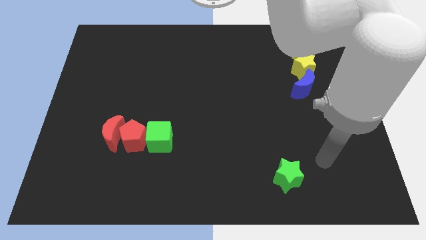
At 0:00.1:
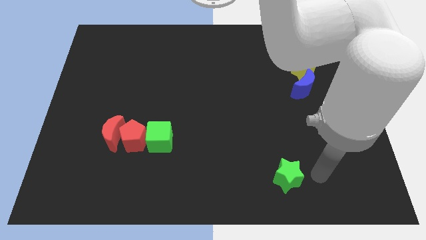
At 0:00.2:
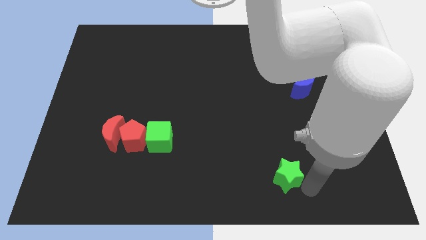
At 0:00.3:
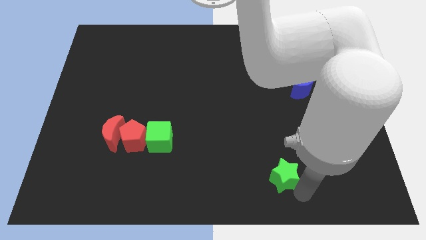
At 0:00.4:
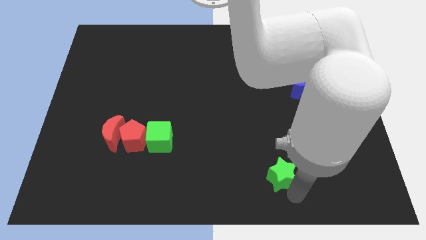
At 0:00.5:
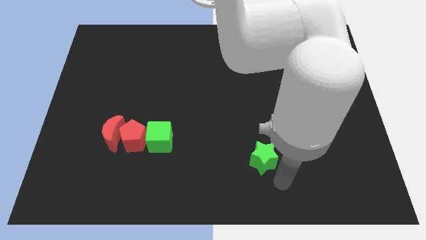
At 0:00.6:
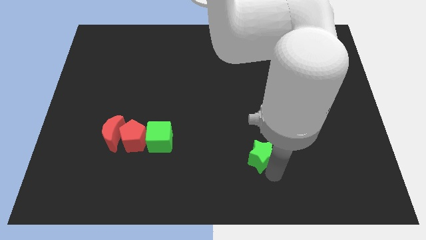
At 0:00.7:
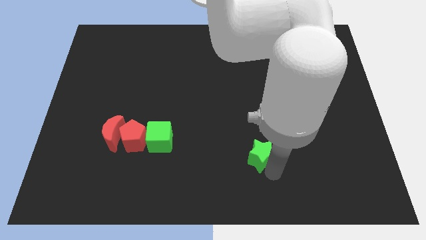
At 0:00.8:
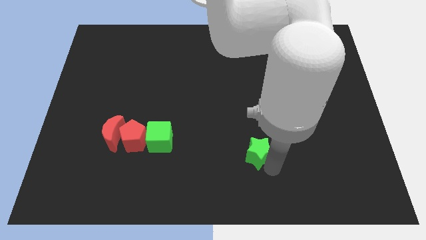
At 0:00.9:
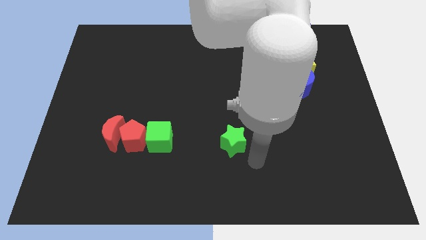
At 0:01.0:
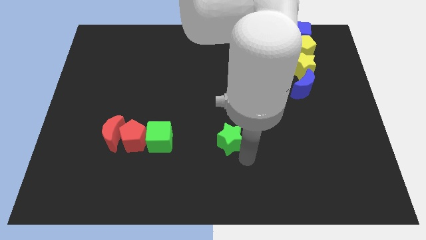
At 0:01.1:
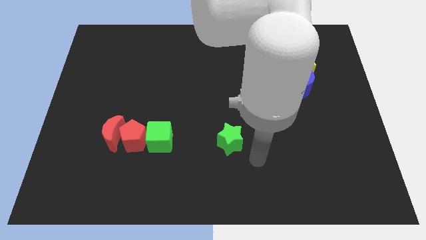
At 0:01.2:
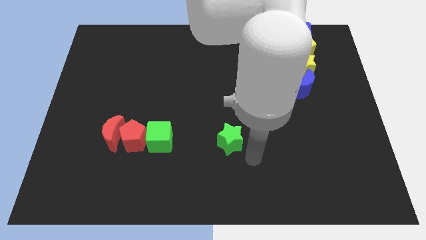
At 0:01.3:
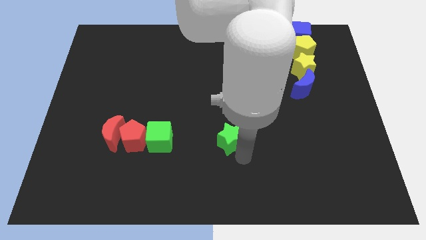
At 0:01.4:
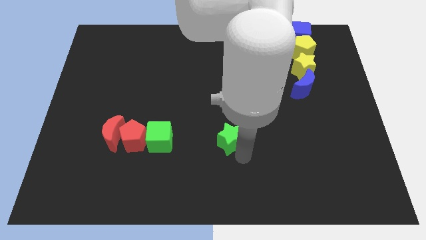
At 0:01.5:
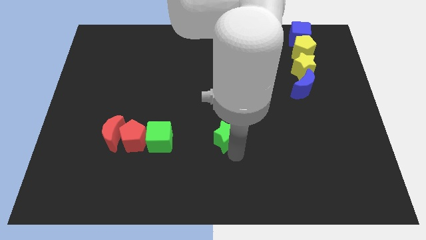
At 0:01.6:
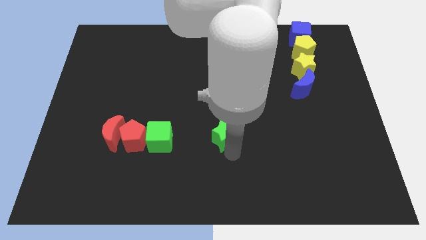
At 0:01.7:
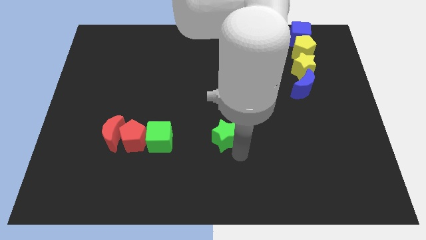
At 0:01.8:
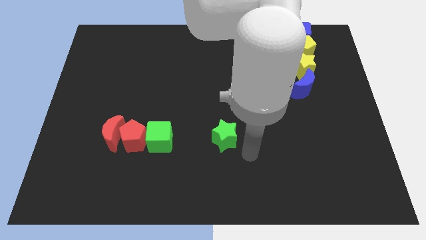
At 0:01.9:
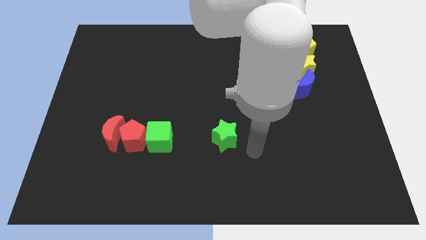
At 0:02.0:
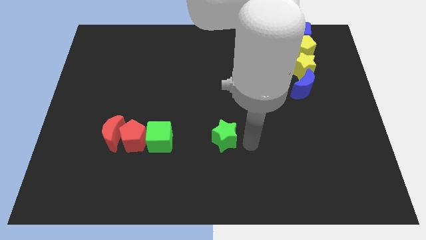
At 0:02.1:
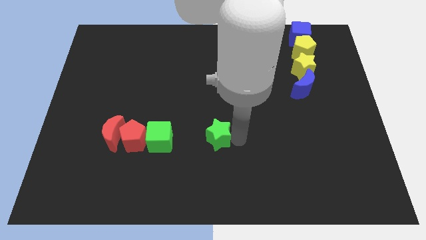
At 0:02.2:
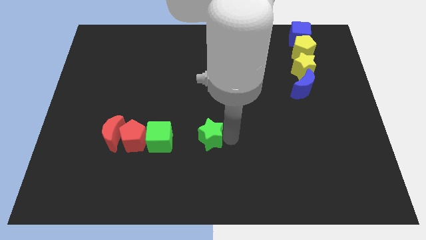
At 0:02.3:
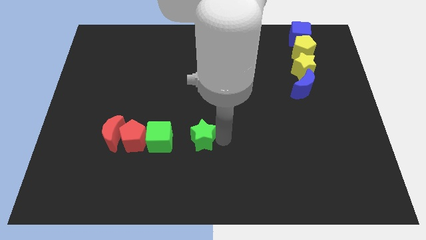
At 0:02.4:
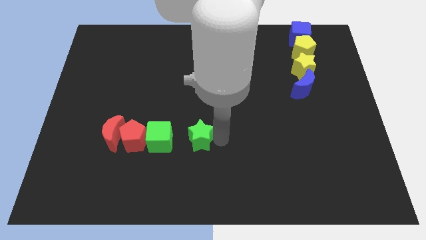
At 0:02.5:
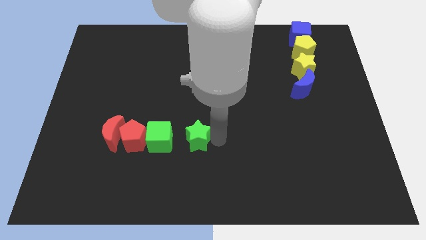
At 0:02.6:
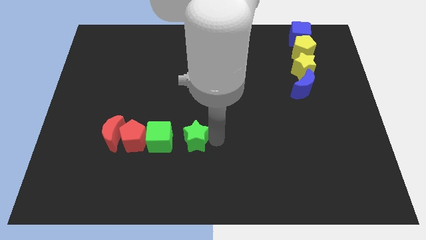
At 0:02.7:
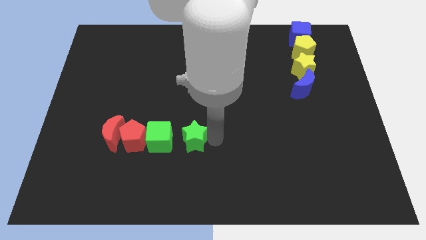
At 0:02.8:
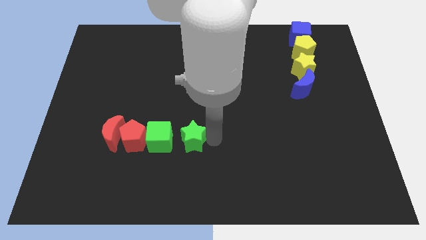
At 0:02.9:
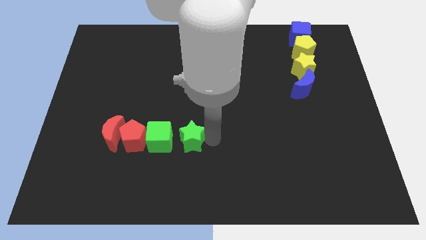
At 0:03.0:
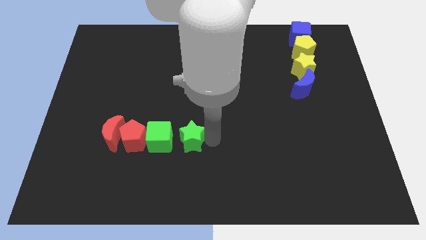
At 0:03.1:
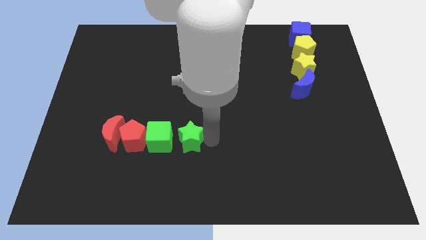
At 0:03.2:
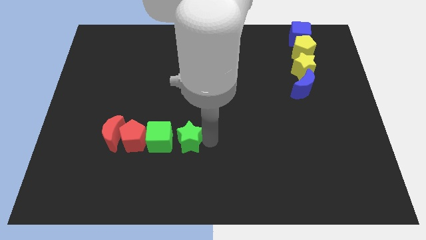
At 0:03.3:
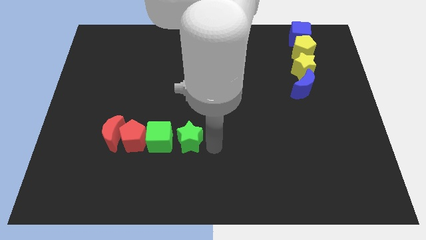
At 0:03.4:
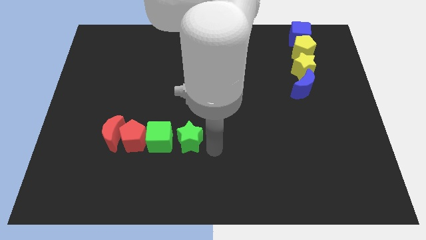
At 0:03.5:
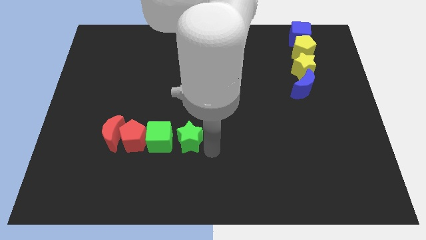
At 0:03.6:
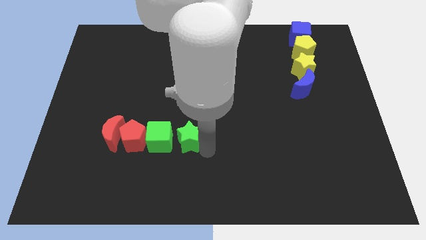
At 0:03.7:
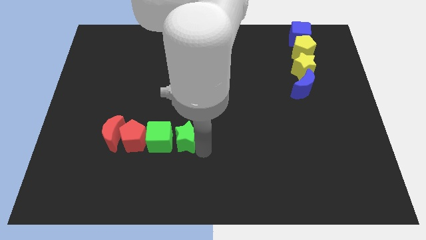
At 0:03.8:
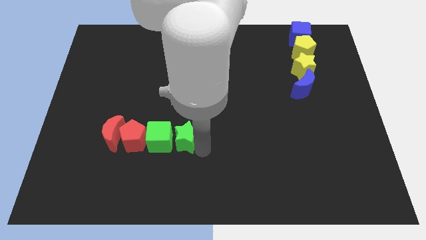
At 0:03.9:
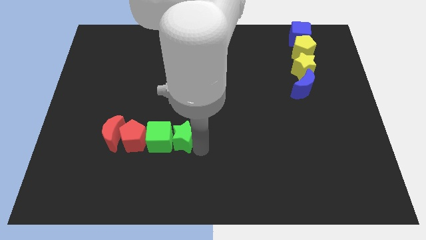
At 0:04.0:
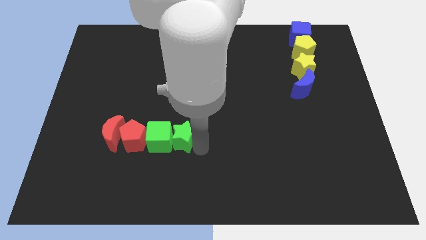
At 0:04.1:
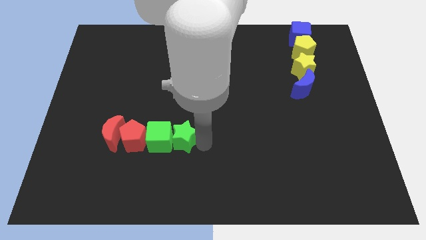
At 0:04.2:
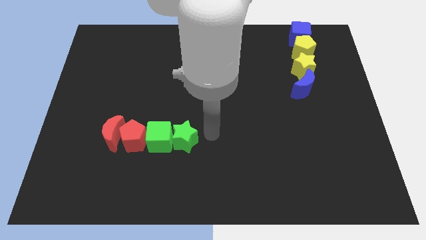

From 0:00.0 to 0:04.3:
place the green star to the right of the green cube to form a horizontal line of blocks

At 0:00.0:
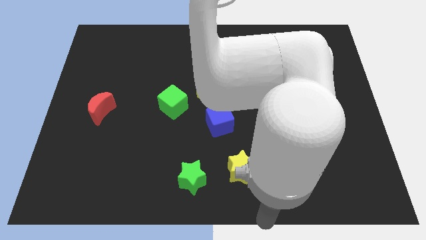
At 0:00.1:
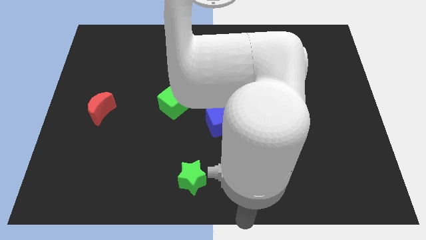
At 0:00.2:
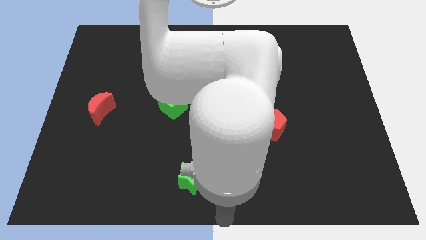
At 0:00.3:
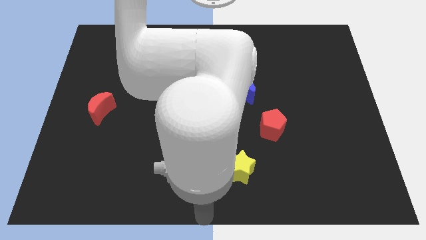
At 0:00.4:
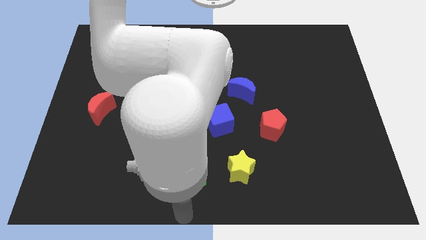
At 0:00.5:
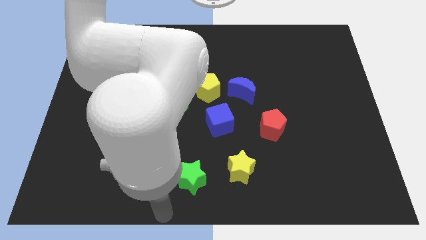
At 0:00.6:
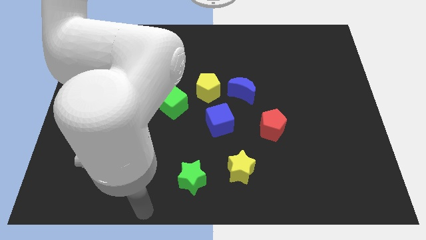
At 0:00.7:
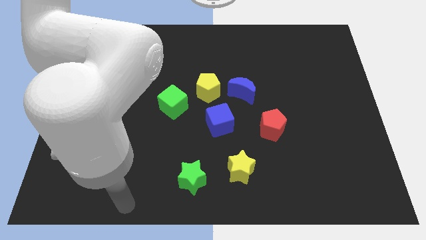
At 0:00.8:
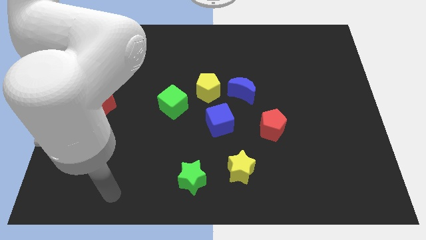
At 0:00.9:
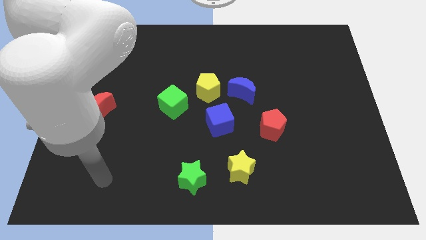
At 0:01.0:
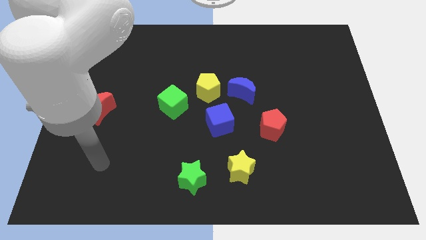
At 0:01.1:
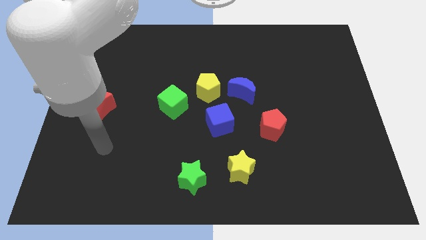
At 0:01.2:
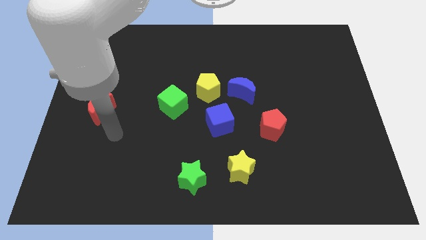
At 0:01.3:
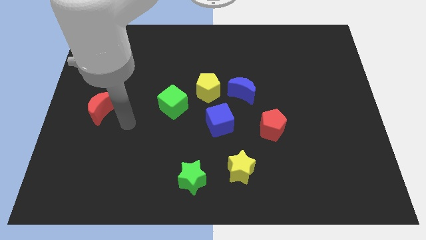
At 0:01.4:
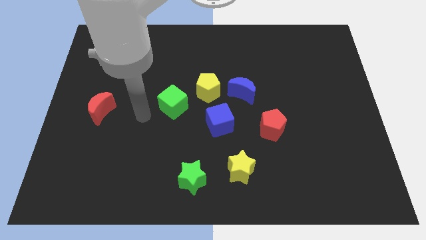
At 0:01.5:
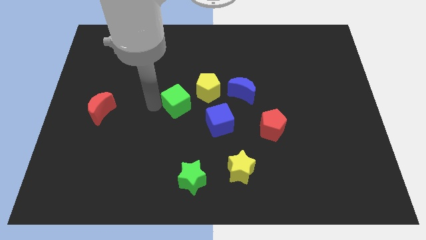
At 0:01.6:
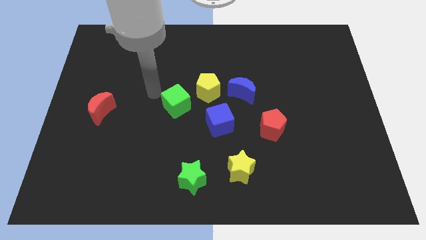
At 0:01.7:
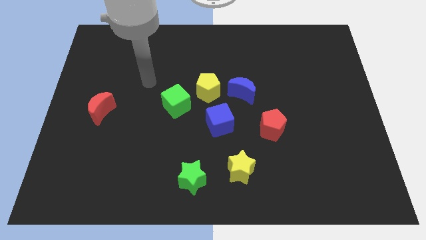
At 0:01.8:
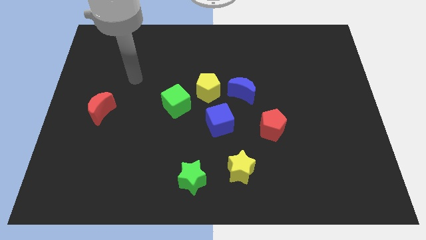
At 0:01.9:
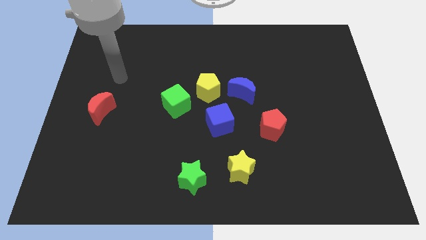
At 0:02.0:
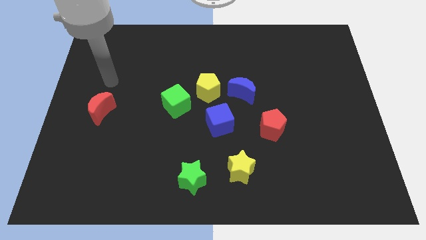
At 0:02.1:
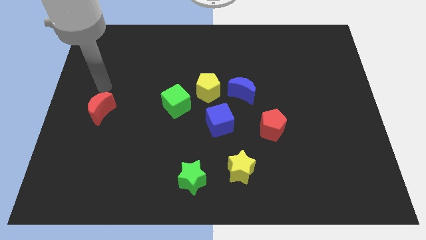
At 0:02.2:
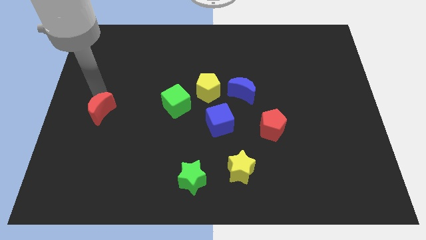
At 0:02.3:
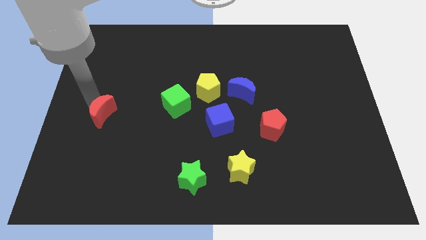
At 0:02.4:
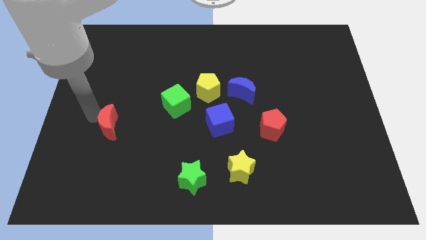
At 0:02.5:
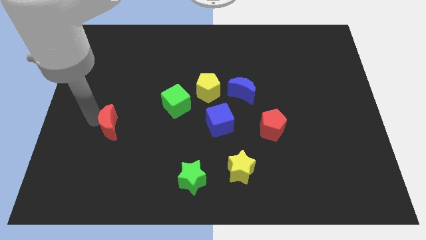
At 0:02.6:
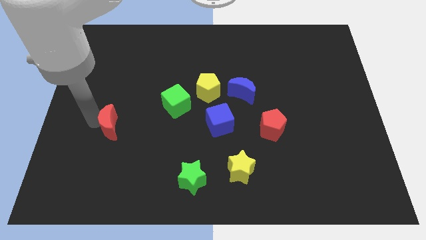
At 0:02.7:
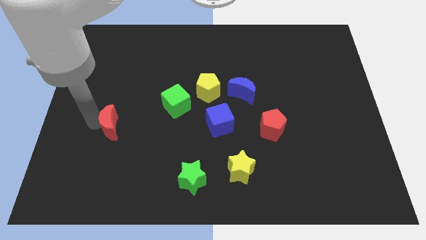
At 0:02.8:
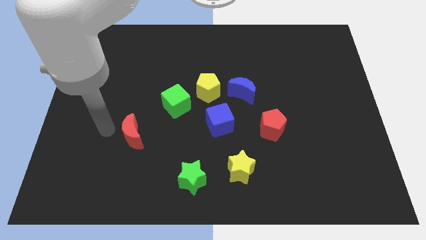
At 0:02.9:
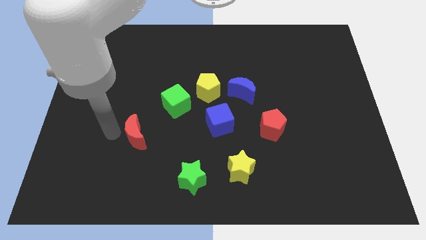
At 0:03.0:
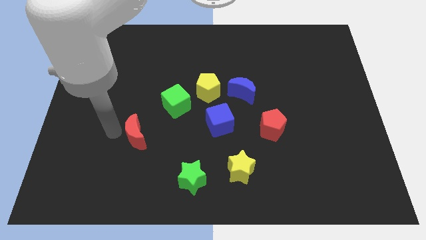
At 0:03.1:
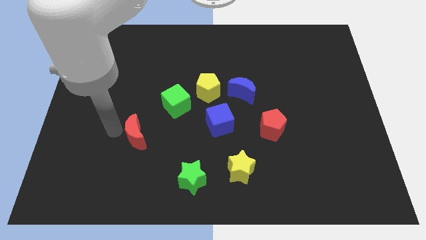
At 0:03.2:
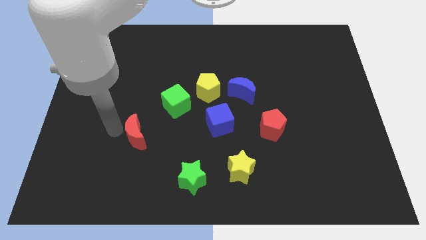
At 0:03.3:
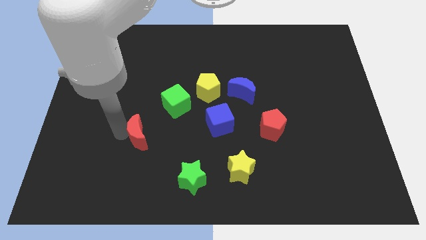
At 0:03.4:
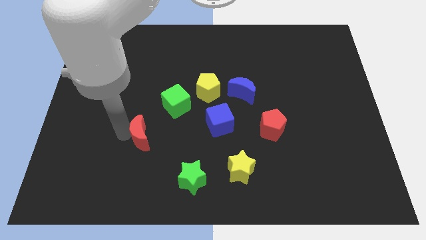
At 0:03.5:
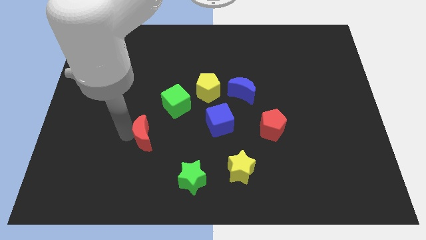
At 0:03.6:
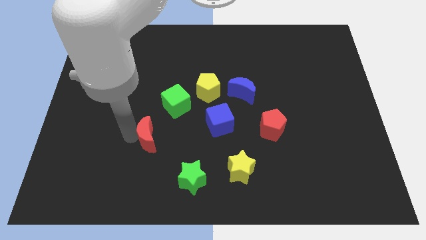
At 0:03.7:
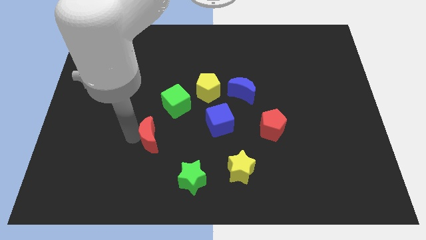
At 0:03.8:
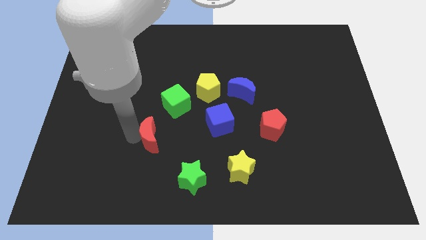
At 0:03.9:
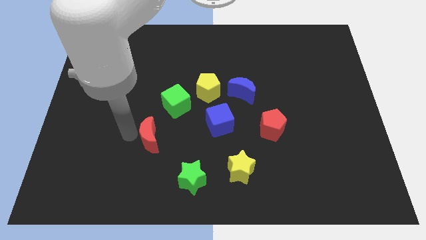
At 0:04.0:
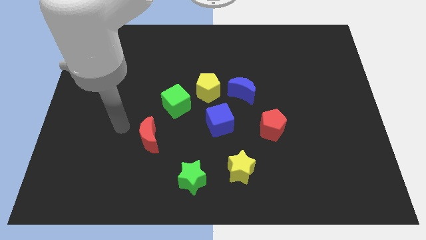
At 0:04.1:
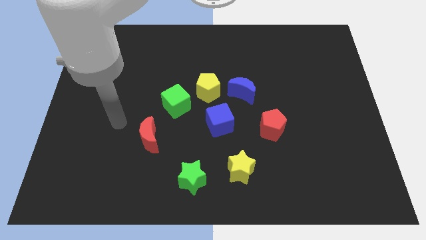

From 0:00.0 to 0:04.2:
push the red moon towards the right side of the board

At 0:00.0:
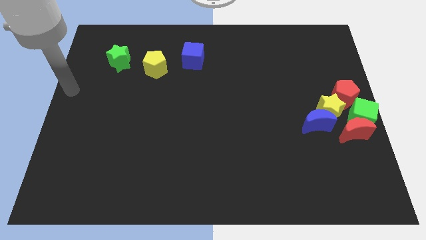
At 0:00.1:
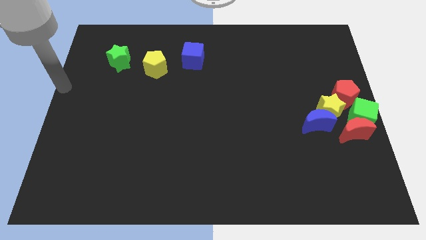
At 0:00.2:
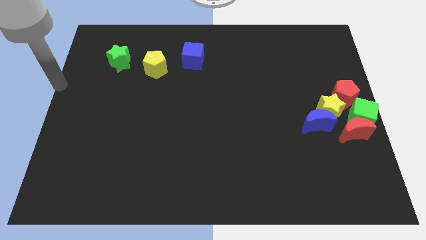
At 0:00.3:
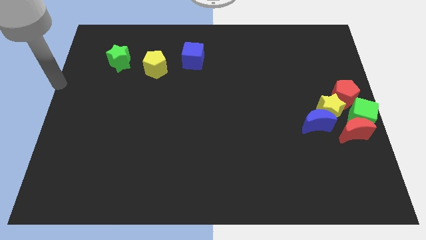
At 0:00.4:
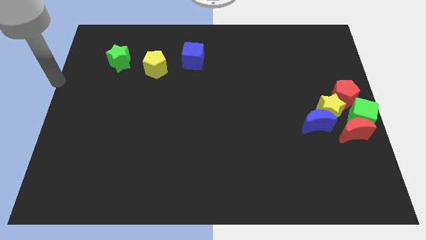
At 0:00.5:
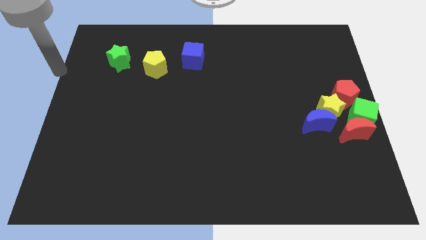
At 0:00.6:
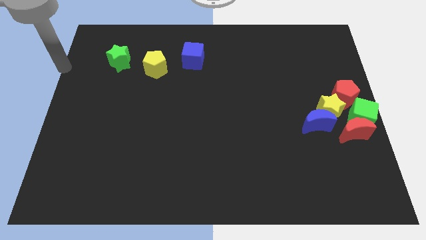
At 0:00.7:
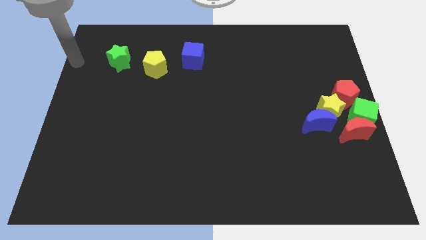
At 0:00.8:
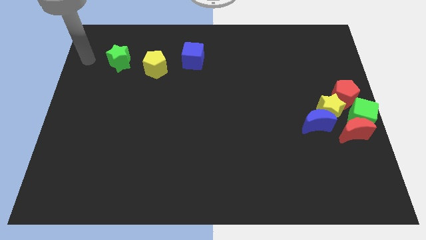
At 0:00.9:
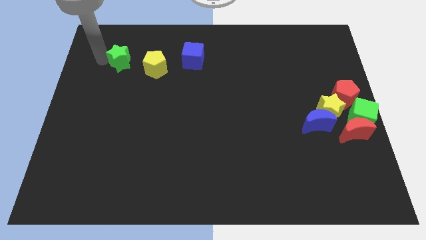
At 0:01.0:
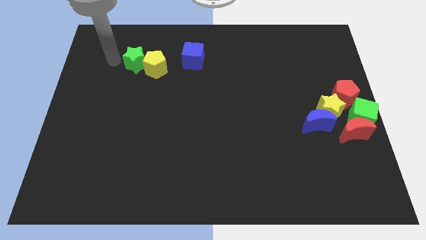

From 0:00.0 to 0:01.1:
move your arm to the left side of the green star
